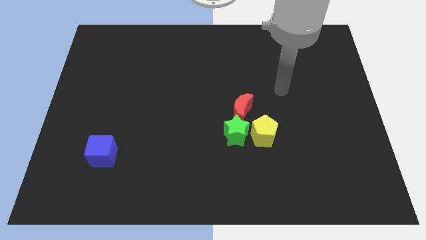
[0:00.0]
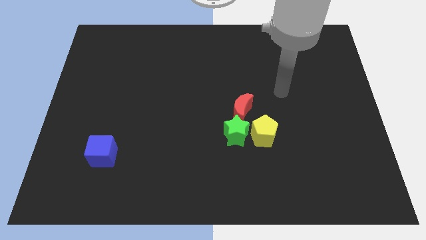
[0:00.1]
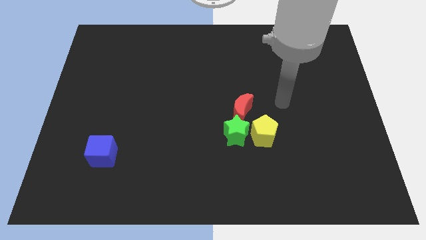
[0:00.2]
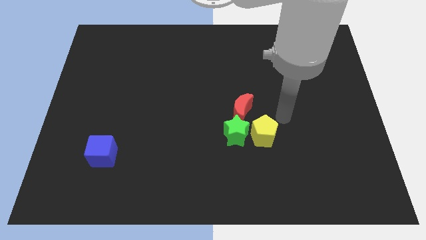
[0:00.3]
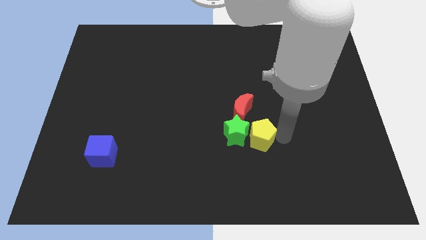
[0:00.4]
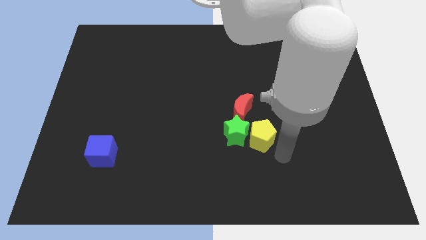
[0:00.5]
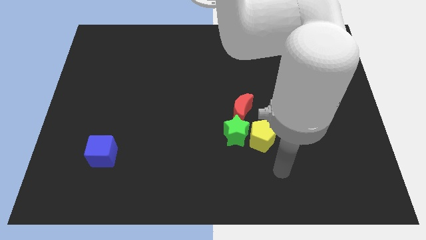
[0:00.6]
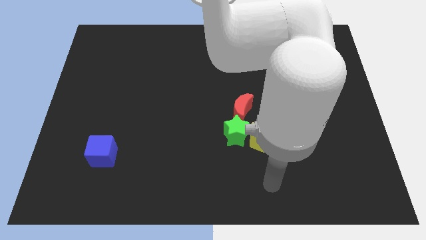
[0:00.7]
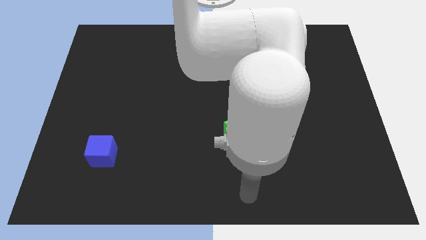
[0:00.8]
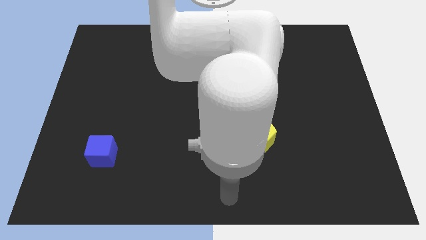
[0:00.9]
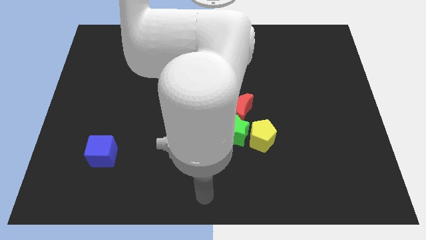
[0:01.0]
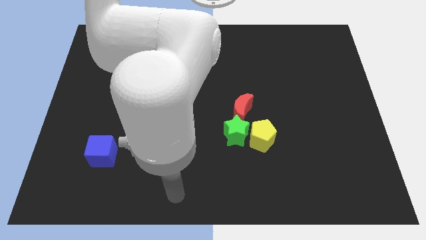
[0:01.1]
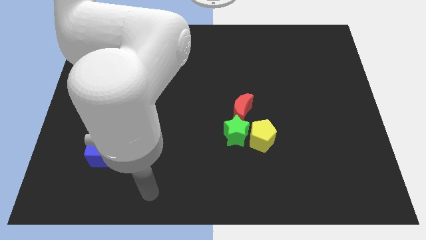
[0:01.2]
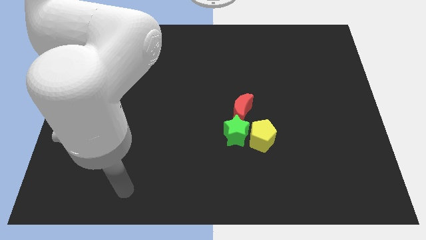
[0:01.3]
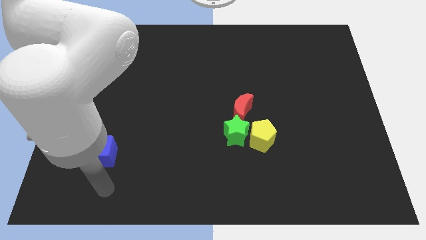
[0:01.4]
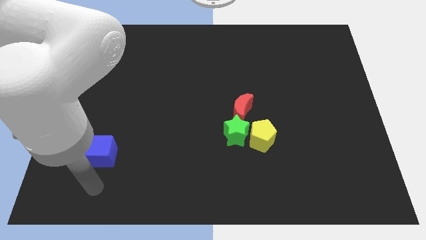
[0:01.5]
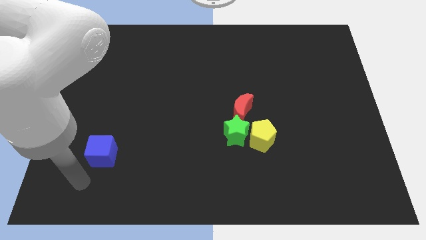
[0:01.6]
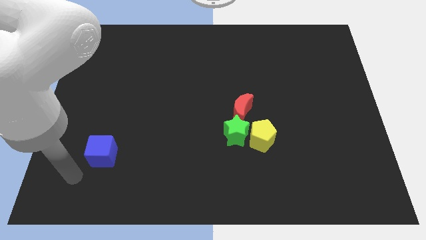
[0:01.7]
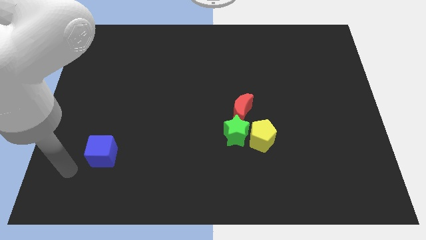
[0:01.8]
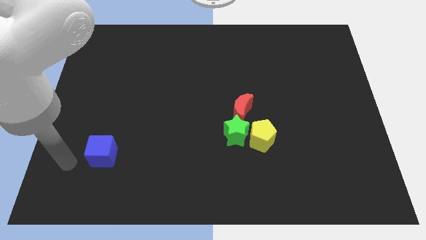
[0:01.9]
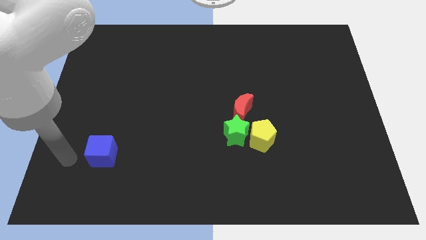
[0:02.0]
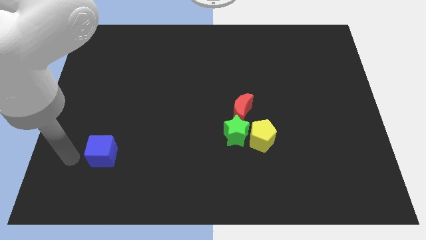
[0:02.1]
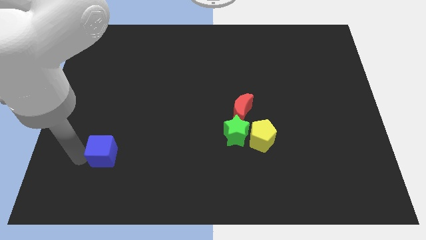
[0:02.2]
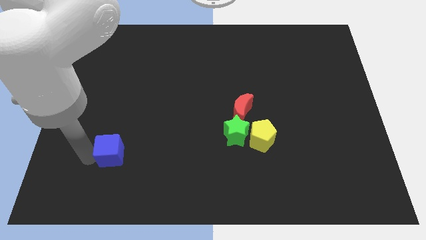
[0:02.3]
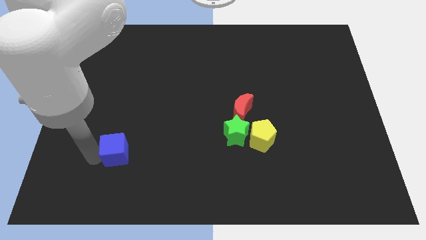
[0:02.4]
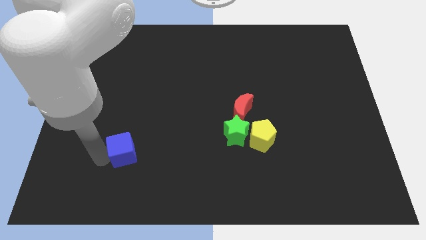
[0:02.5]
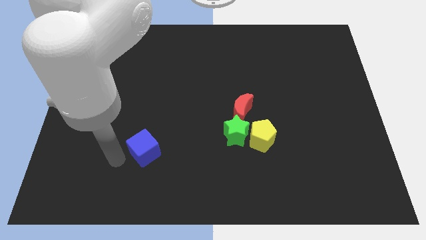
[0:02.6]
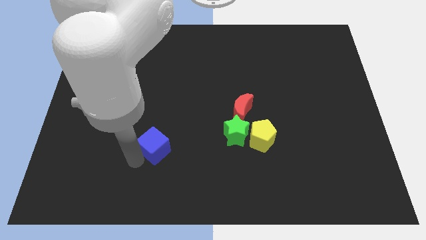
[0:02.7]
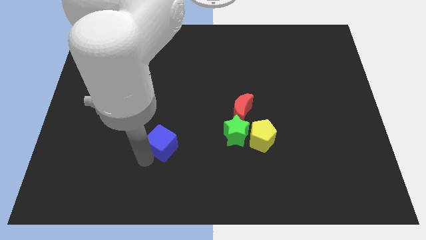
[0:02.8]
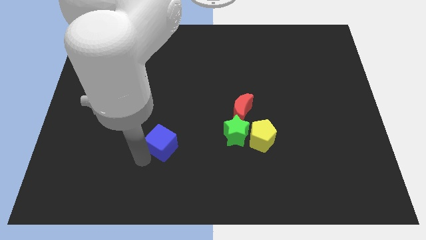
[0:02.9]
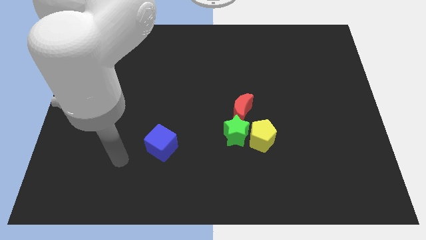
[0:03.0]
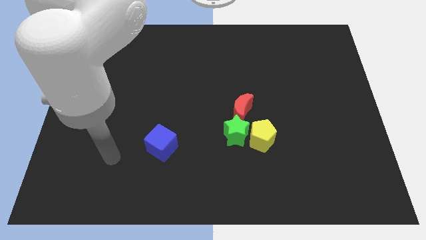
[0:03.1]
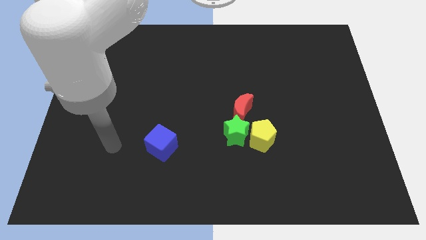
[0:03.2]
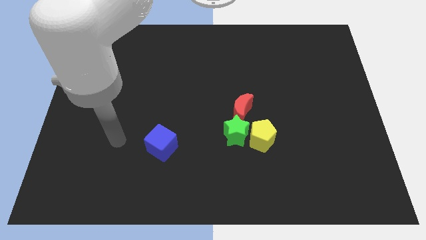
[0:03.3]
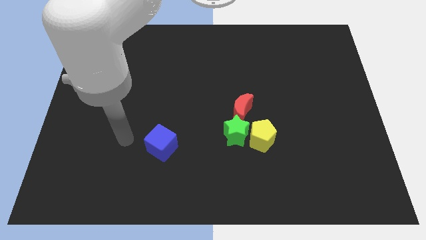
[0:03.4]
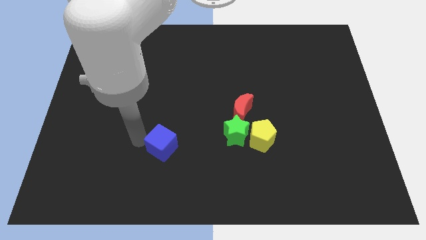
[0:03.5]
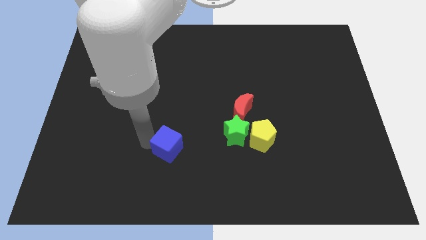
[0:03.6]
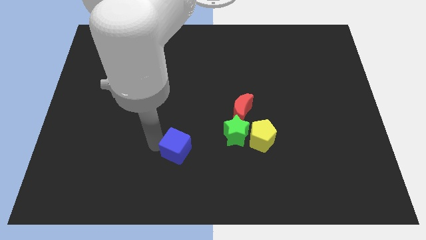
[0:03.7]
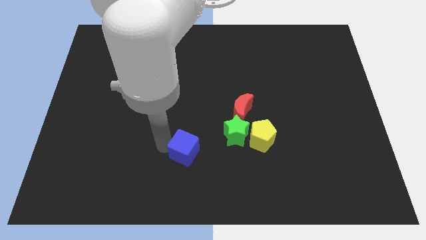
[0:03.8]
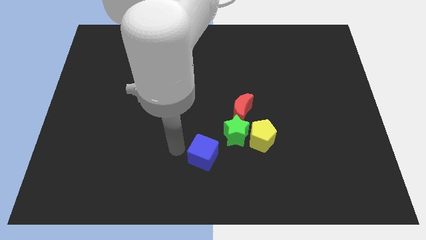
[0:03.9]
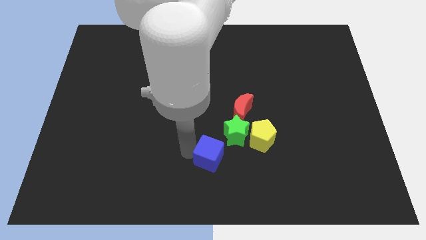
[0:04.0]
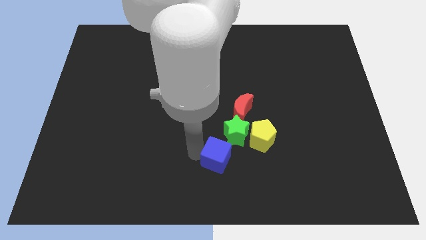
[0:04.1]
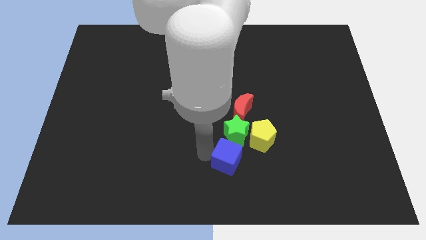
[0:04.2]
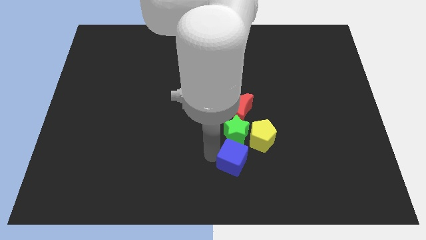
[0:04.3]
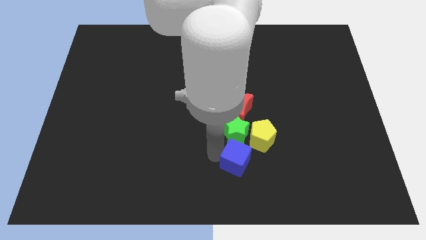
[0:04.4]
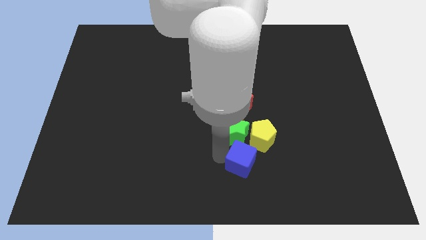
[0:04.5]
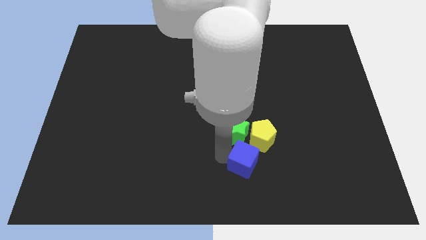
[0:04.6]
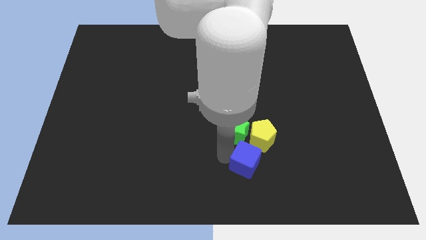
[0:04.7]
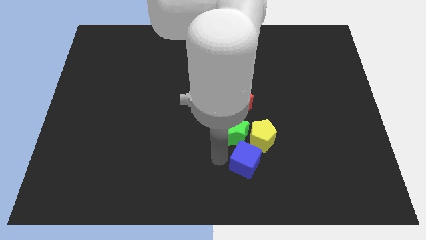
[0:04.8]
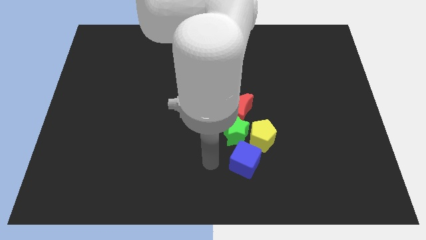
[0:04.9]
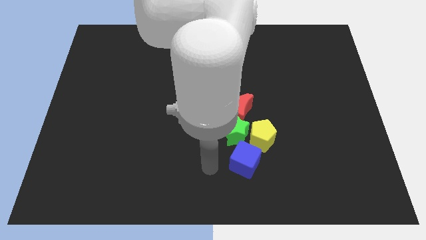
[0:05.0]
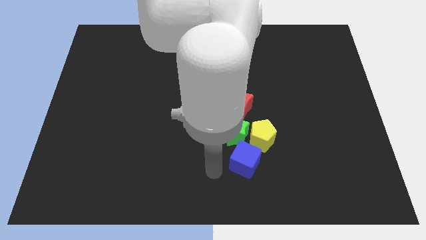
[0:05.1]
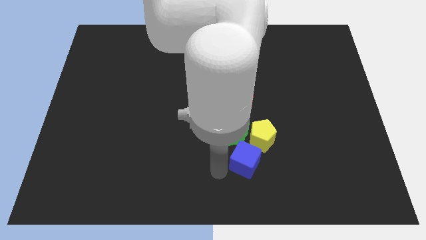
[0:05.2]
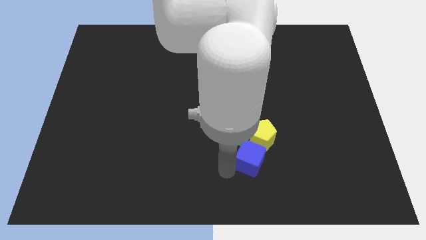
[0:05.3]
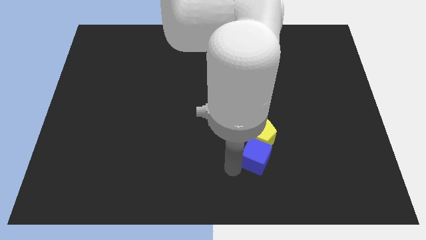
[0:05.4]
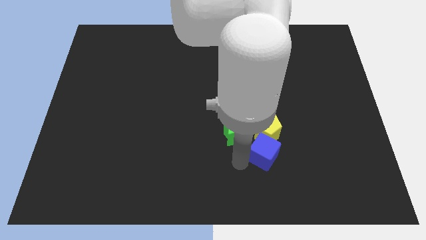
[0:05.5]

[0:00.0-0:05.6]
put the blue block next to the yellow pentagon

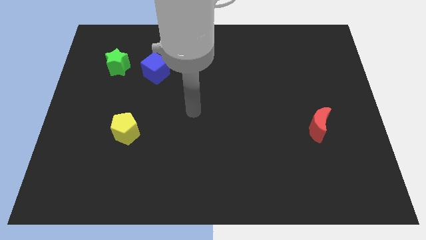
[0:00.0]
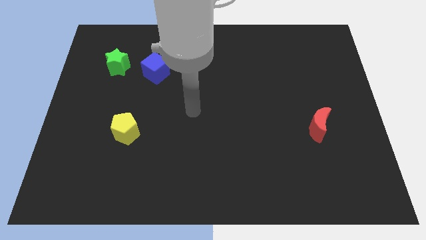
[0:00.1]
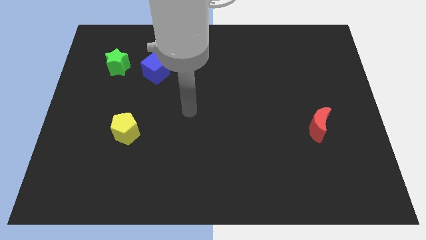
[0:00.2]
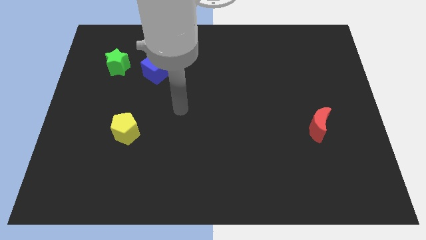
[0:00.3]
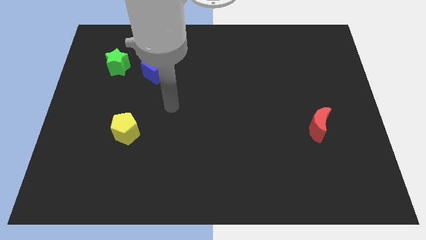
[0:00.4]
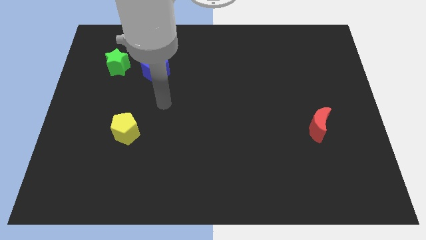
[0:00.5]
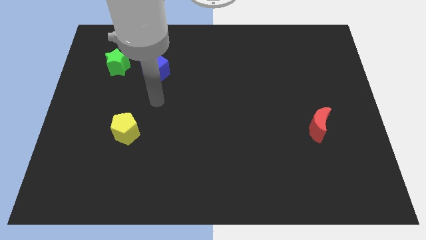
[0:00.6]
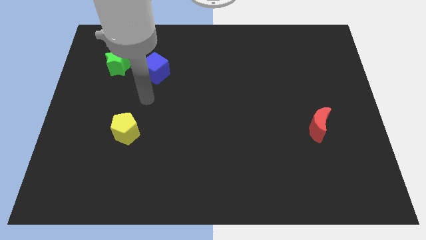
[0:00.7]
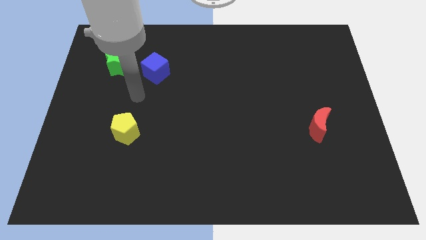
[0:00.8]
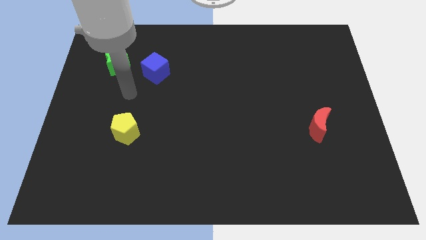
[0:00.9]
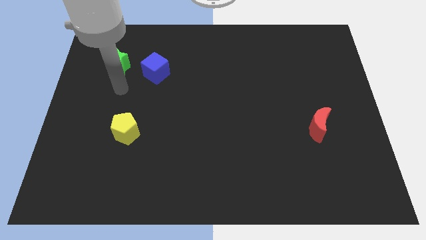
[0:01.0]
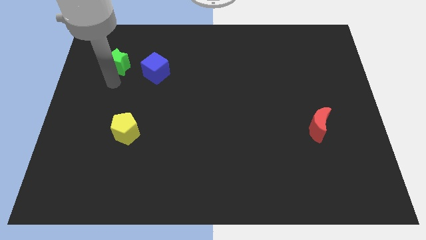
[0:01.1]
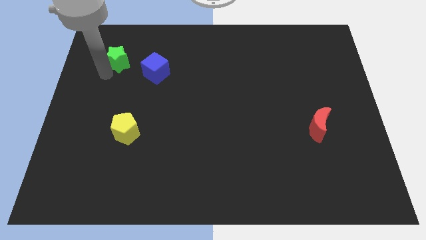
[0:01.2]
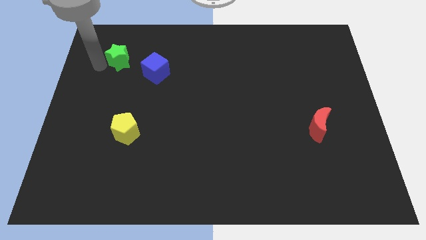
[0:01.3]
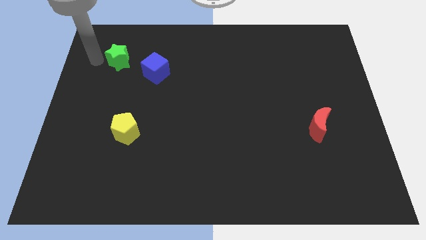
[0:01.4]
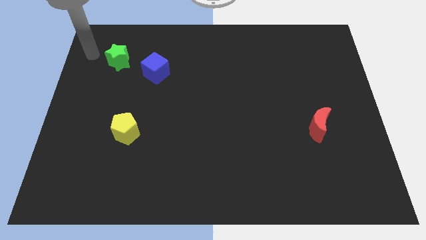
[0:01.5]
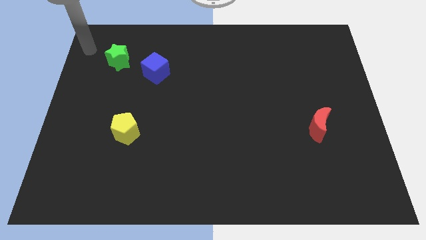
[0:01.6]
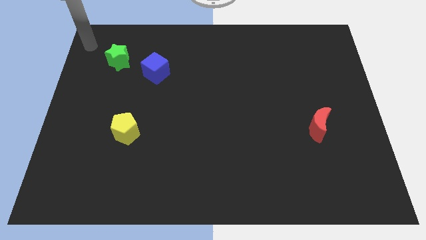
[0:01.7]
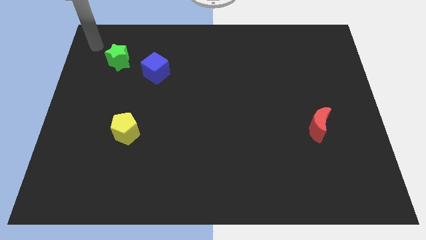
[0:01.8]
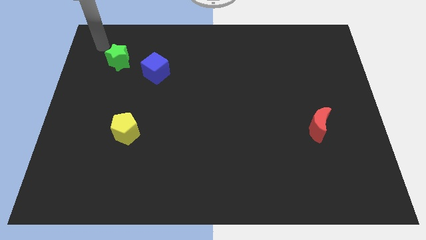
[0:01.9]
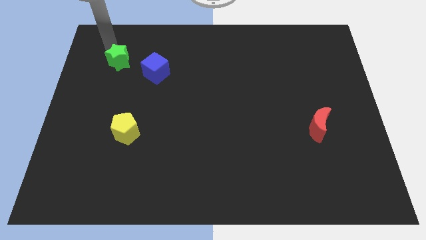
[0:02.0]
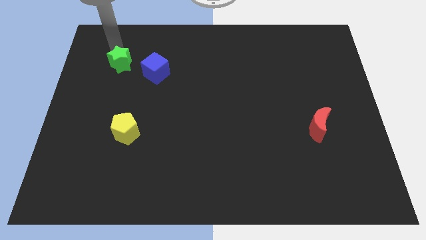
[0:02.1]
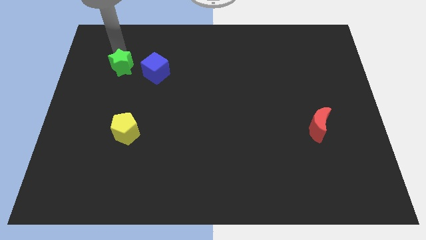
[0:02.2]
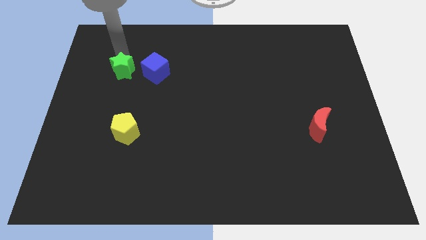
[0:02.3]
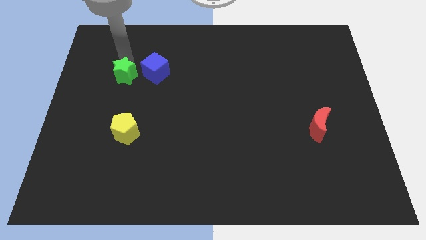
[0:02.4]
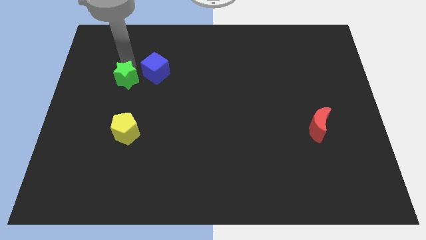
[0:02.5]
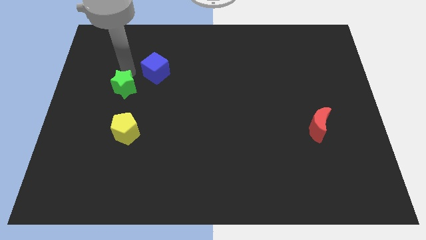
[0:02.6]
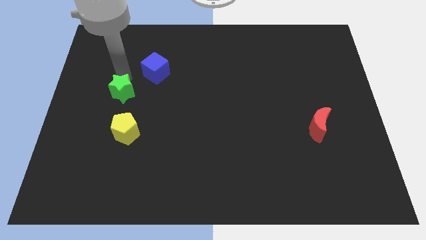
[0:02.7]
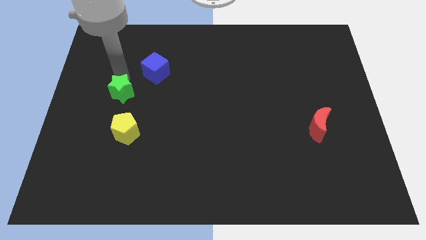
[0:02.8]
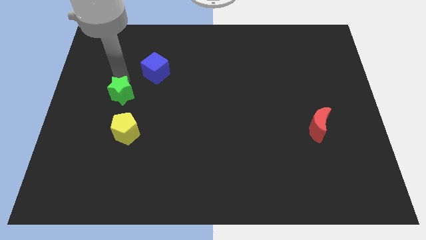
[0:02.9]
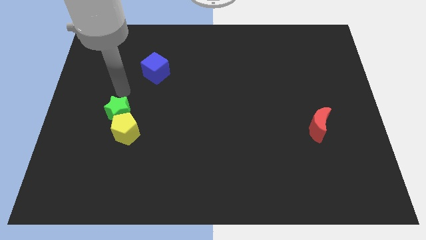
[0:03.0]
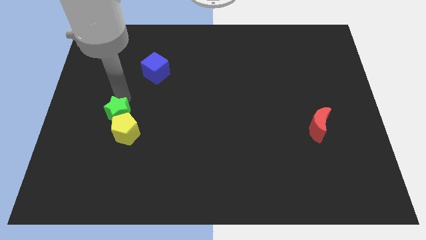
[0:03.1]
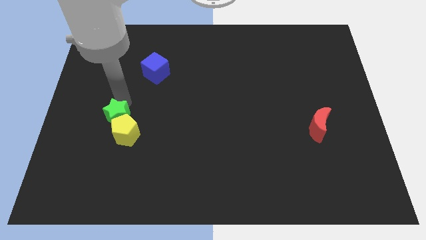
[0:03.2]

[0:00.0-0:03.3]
push the green star next to the yellow block
